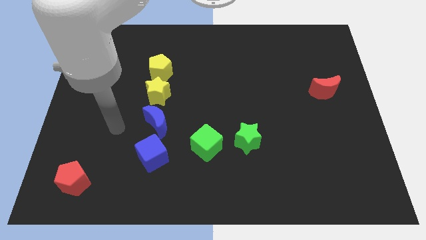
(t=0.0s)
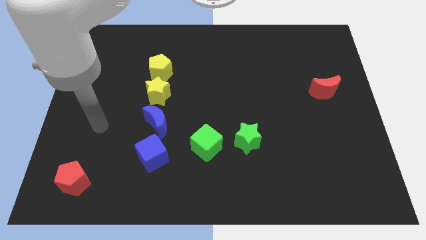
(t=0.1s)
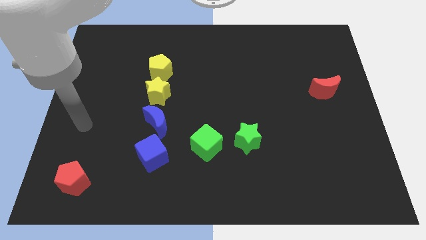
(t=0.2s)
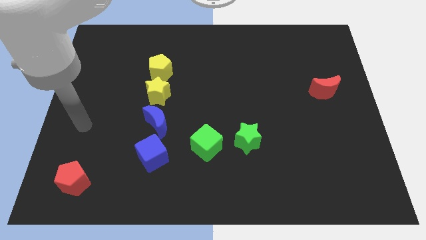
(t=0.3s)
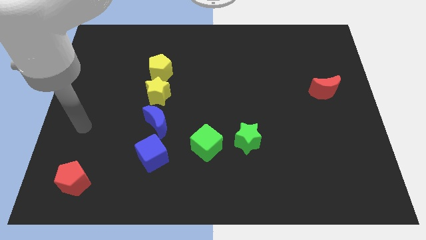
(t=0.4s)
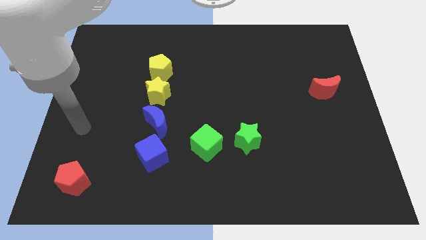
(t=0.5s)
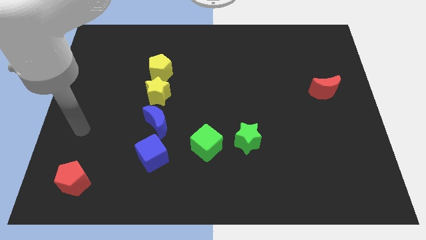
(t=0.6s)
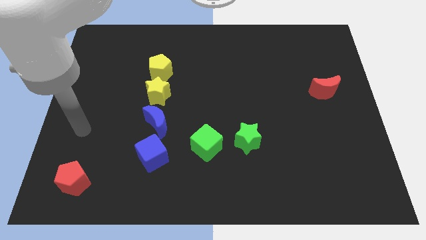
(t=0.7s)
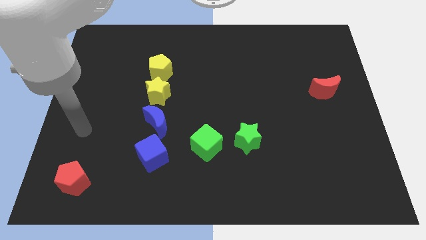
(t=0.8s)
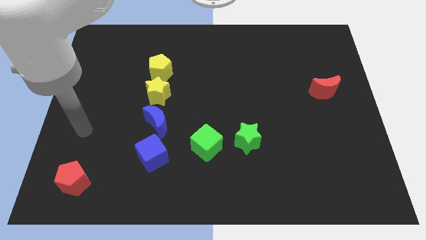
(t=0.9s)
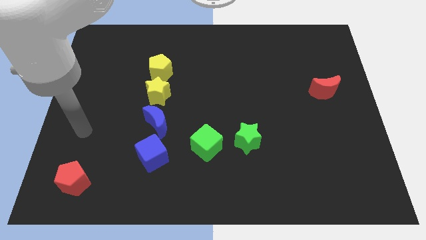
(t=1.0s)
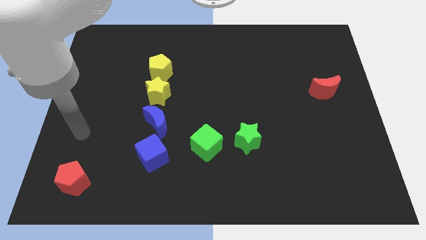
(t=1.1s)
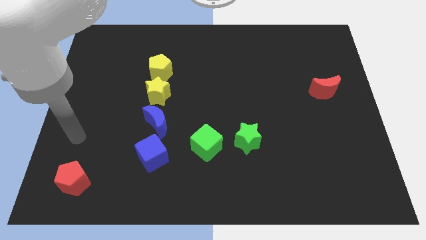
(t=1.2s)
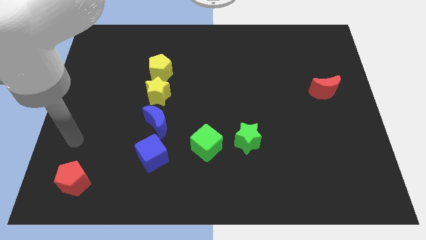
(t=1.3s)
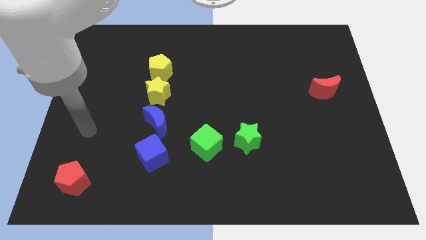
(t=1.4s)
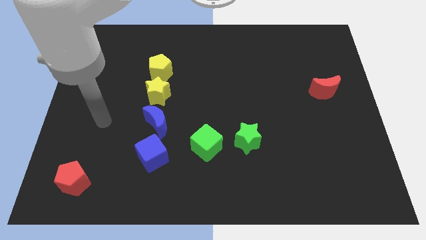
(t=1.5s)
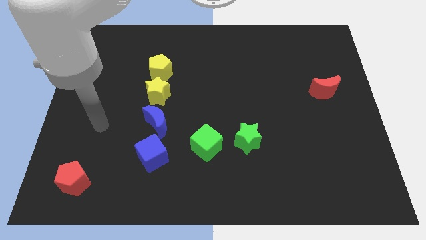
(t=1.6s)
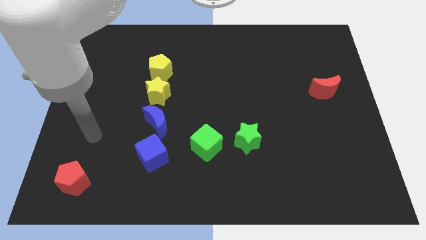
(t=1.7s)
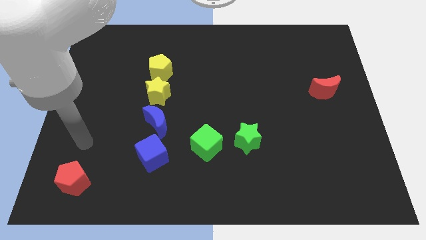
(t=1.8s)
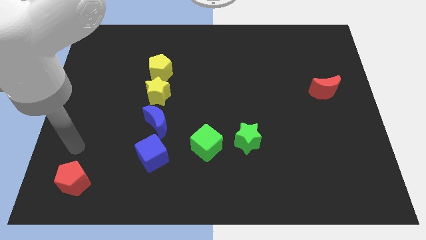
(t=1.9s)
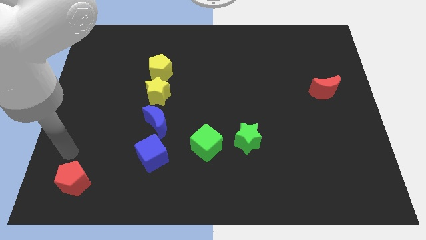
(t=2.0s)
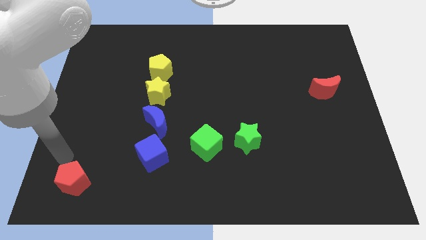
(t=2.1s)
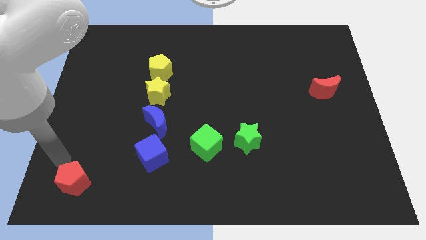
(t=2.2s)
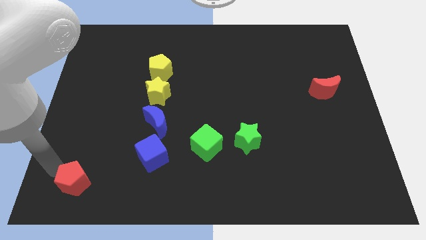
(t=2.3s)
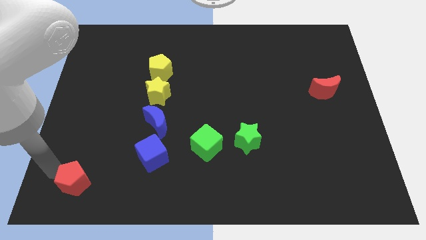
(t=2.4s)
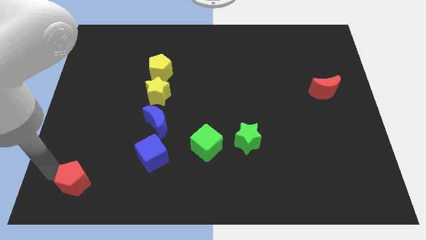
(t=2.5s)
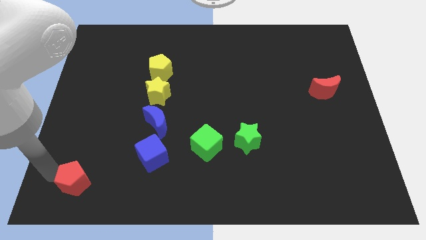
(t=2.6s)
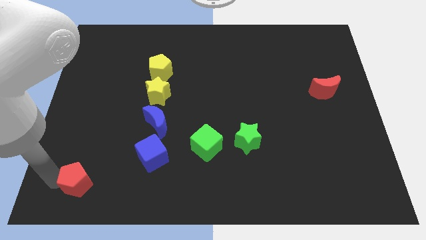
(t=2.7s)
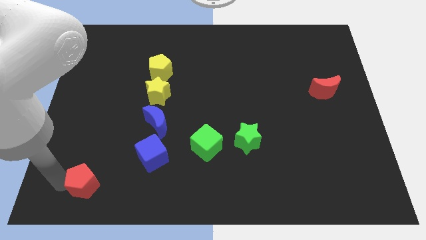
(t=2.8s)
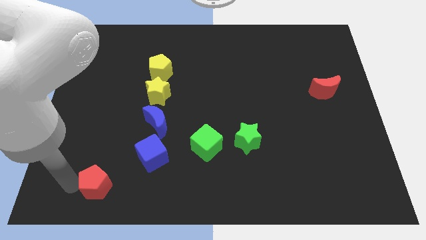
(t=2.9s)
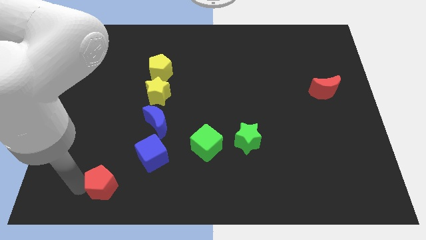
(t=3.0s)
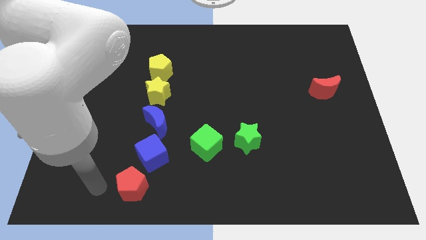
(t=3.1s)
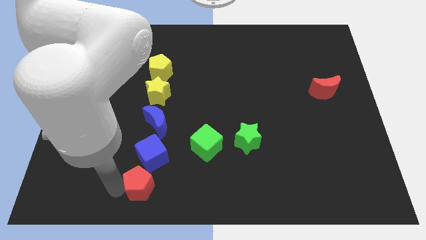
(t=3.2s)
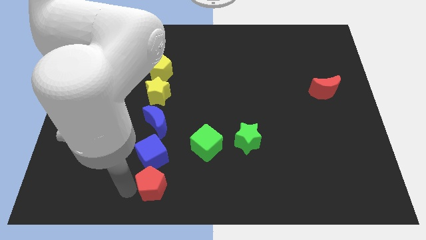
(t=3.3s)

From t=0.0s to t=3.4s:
push the red pentagon to the bottom of the blue cube

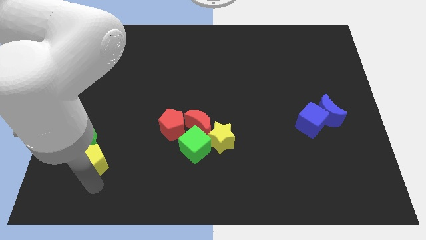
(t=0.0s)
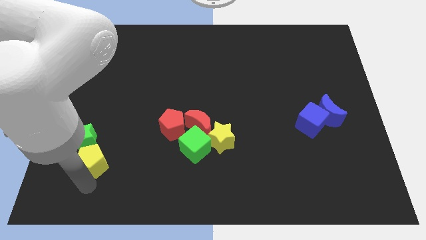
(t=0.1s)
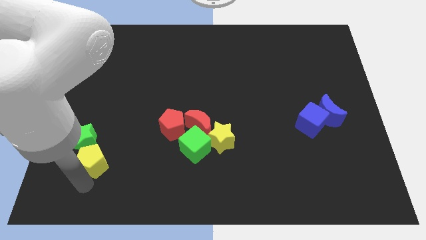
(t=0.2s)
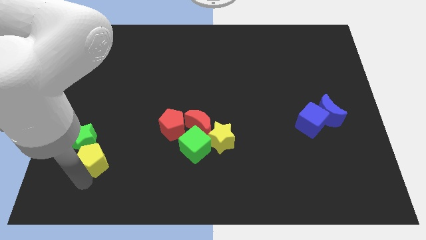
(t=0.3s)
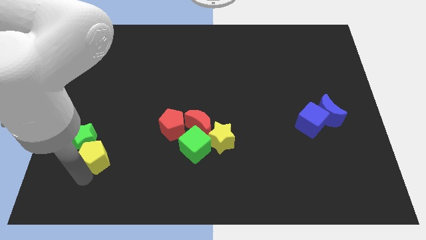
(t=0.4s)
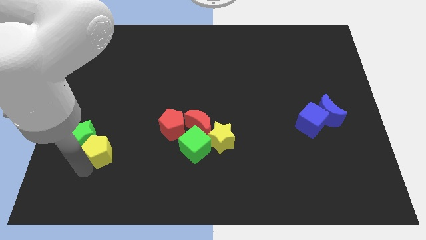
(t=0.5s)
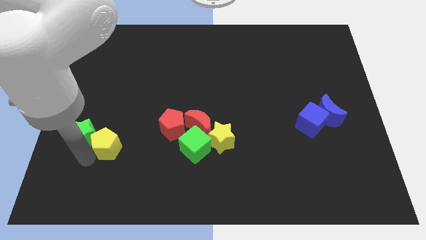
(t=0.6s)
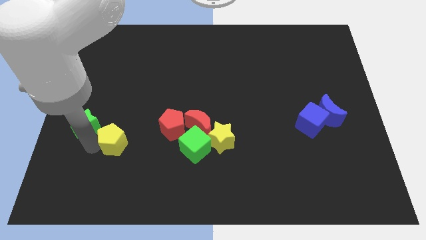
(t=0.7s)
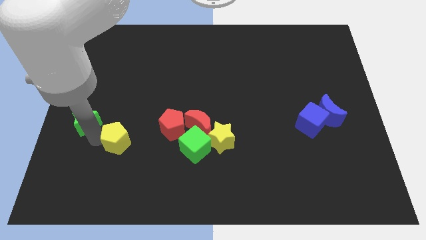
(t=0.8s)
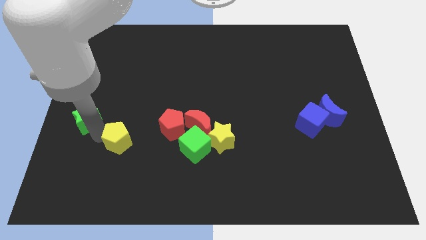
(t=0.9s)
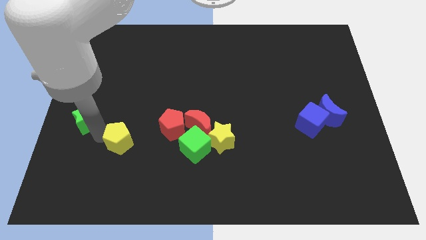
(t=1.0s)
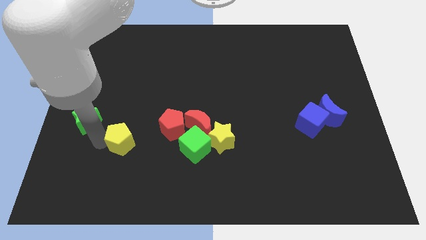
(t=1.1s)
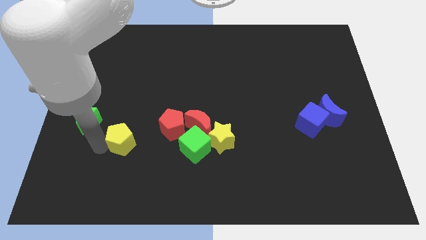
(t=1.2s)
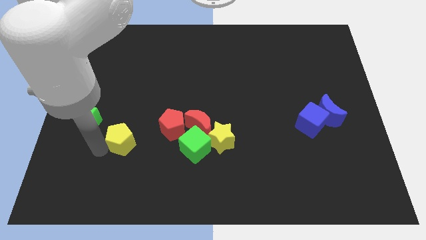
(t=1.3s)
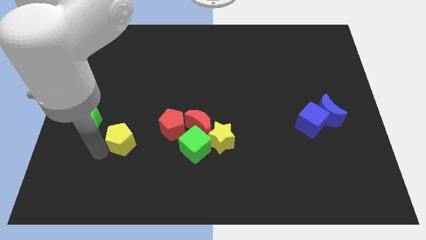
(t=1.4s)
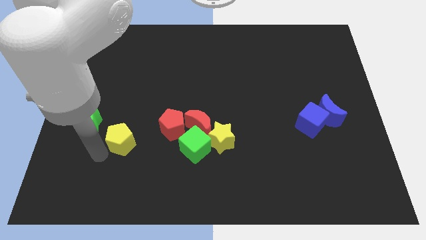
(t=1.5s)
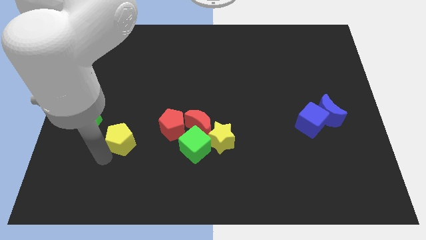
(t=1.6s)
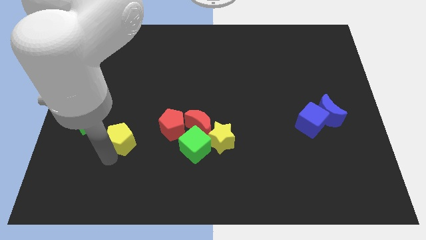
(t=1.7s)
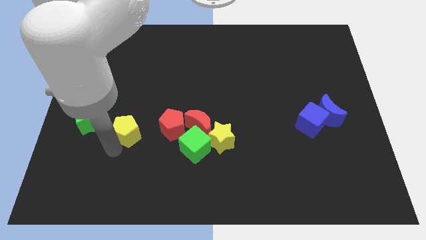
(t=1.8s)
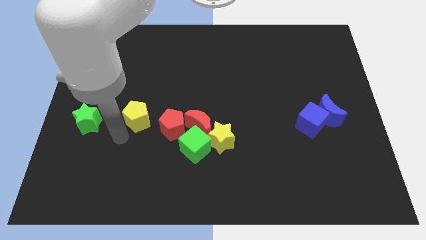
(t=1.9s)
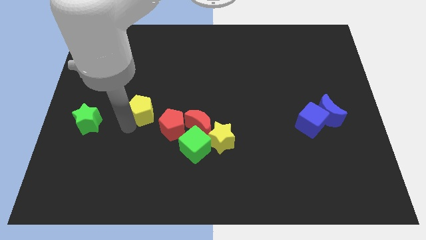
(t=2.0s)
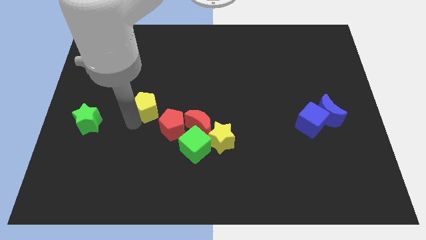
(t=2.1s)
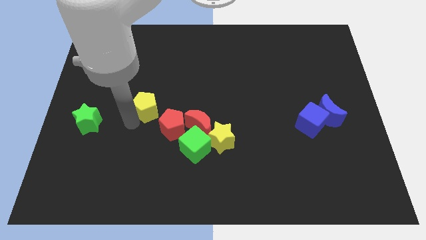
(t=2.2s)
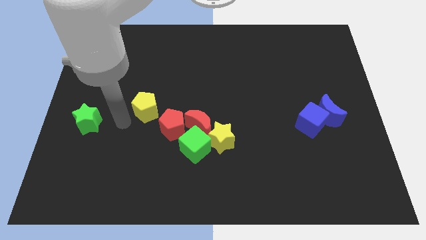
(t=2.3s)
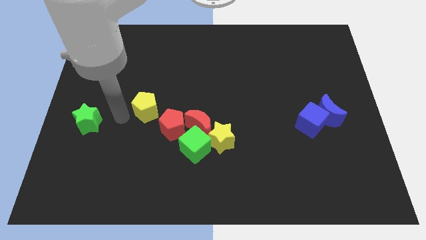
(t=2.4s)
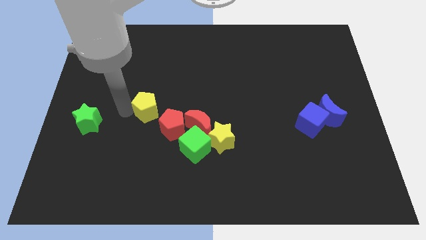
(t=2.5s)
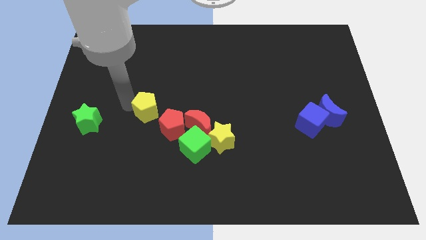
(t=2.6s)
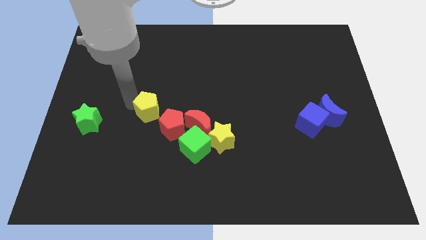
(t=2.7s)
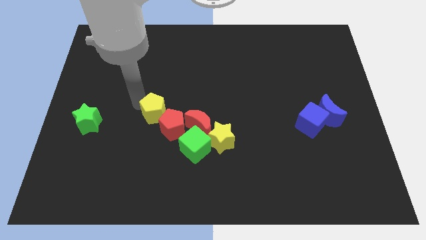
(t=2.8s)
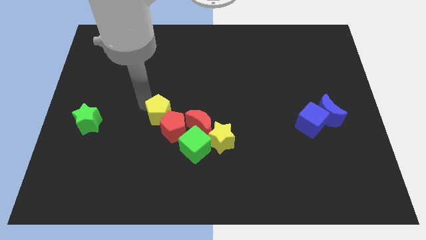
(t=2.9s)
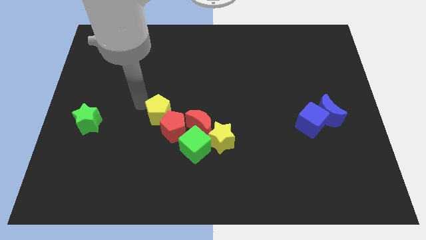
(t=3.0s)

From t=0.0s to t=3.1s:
slide the yellow pentagon to the top left of the red pentagon

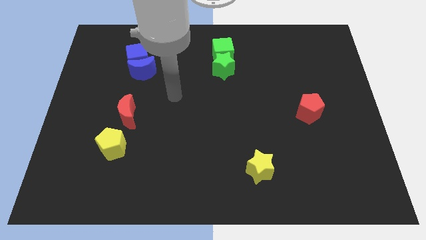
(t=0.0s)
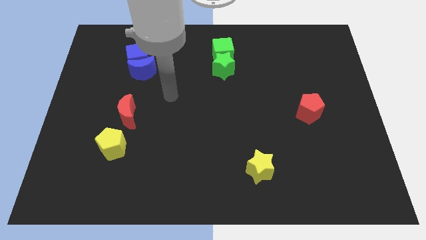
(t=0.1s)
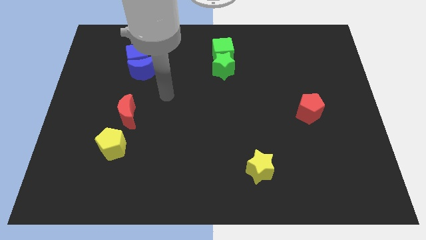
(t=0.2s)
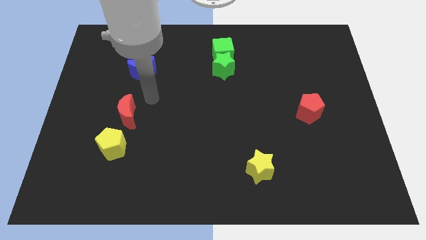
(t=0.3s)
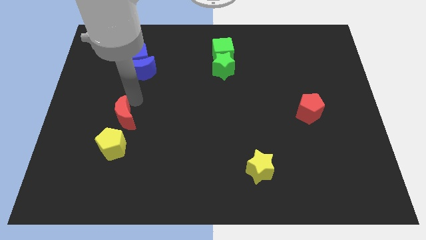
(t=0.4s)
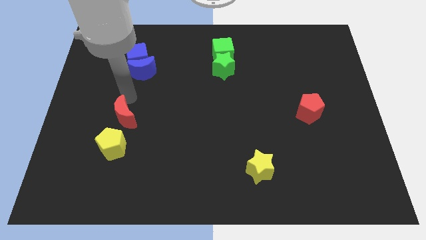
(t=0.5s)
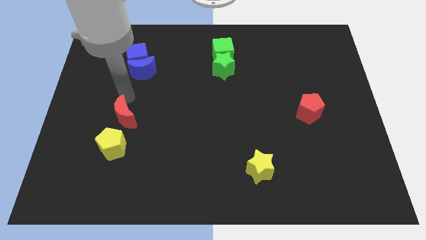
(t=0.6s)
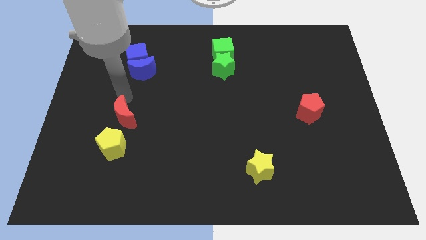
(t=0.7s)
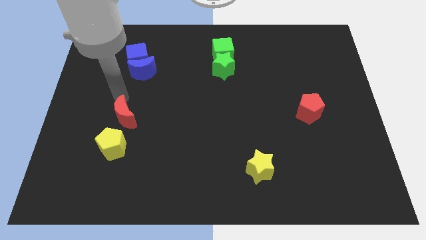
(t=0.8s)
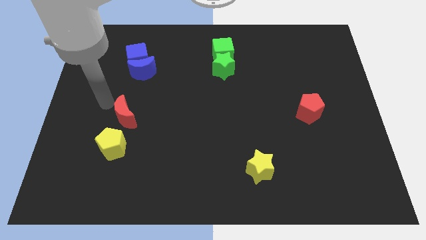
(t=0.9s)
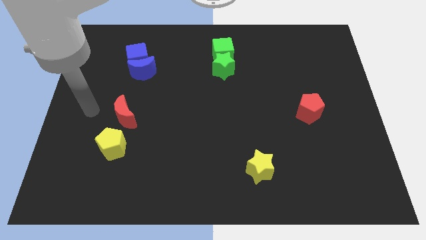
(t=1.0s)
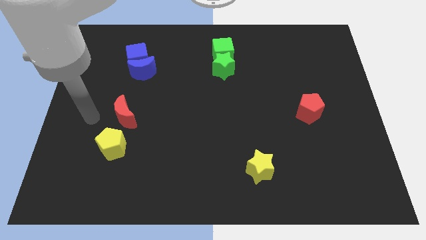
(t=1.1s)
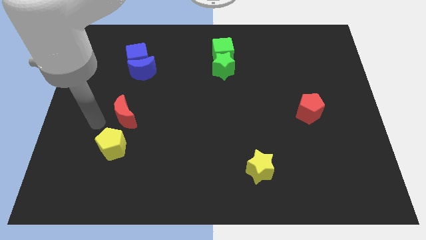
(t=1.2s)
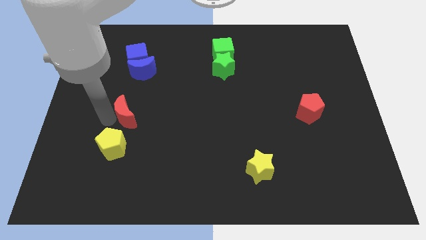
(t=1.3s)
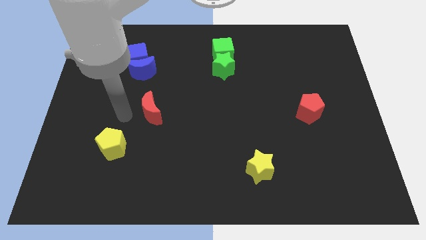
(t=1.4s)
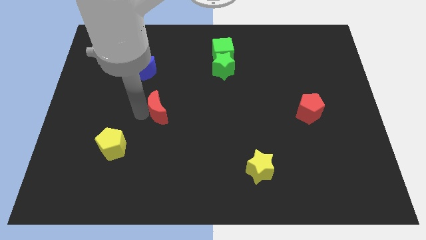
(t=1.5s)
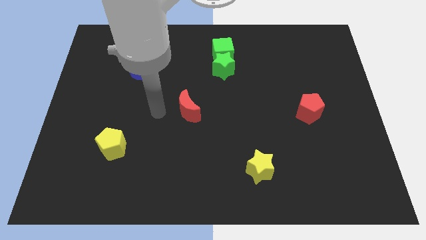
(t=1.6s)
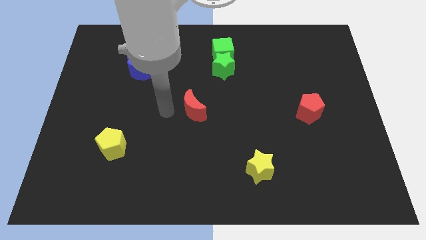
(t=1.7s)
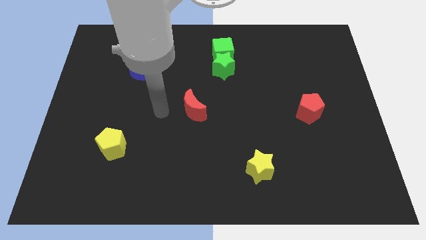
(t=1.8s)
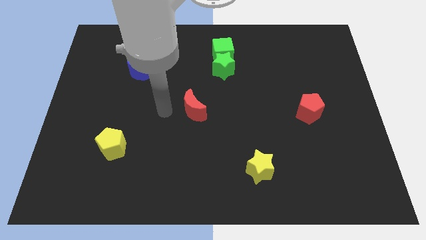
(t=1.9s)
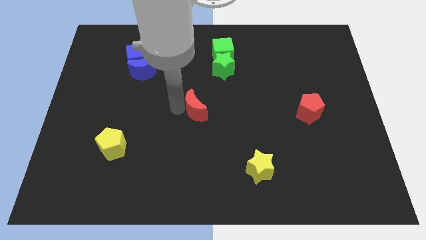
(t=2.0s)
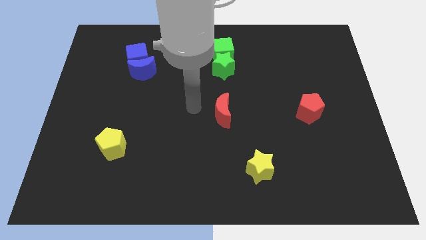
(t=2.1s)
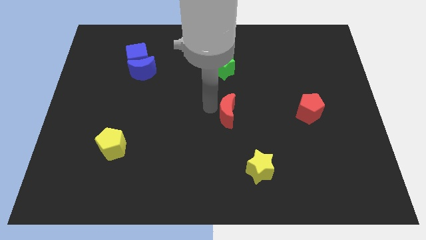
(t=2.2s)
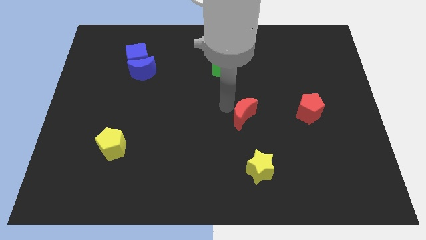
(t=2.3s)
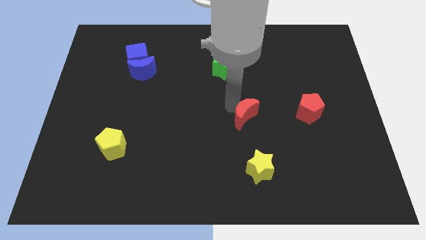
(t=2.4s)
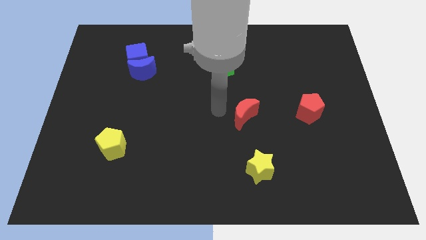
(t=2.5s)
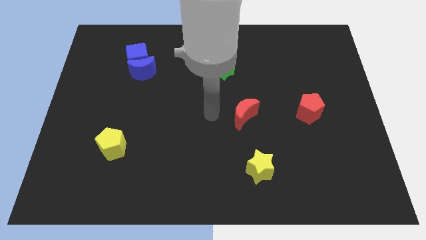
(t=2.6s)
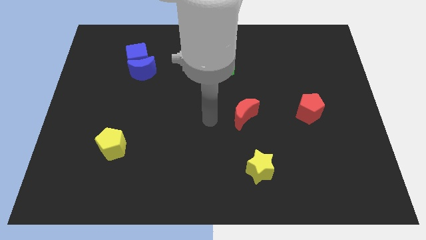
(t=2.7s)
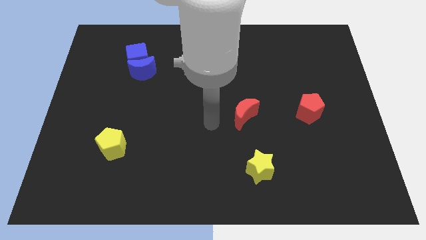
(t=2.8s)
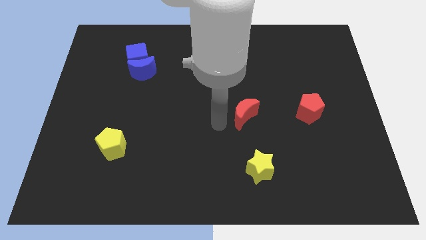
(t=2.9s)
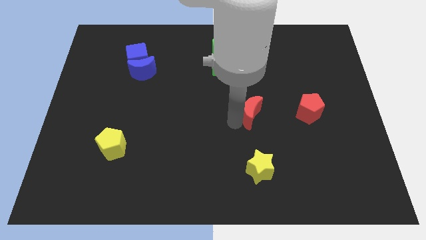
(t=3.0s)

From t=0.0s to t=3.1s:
push the red moon vertically above the yellow star
